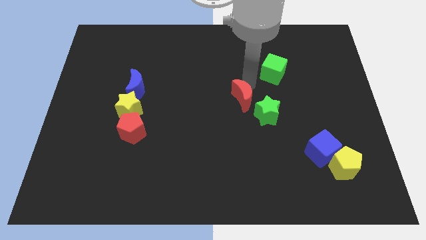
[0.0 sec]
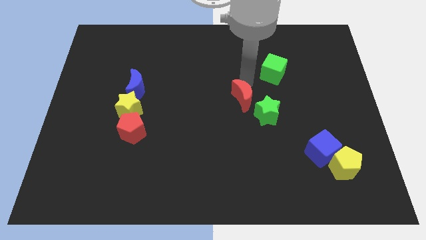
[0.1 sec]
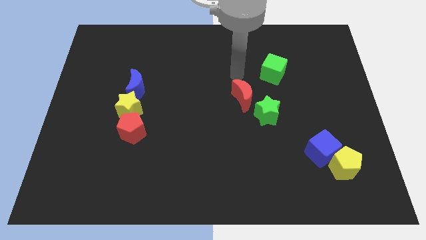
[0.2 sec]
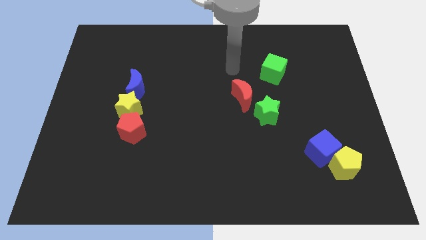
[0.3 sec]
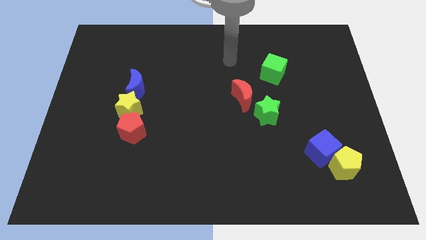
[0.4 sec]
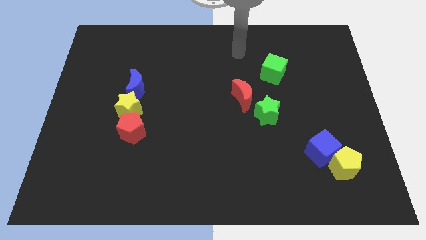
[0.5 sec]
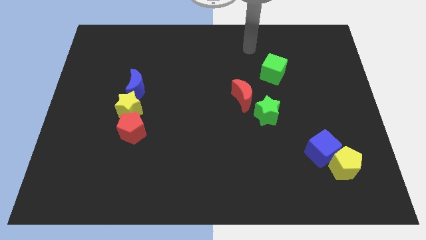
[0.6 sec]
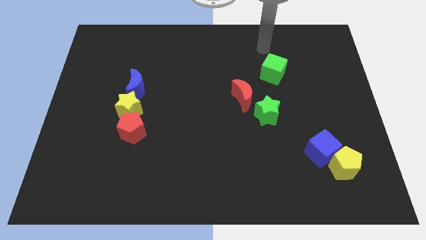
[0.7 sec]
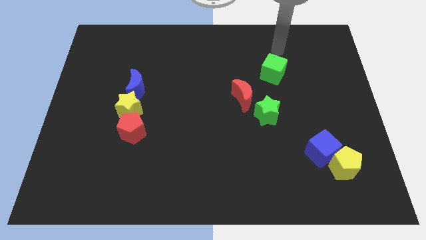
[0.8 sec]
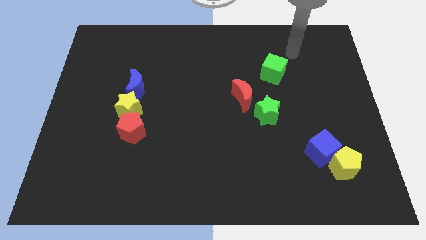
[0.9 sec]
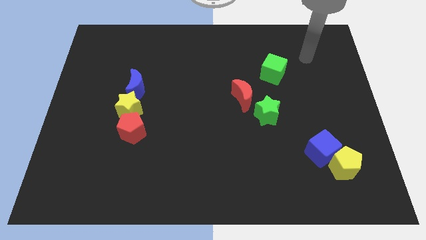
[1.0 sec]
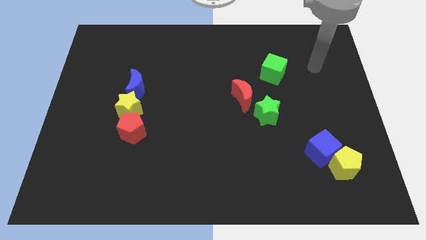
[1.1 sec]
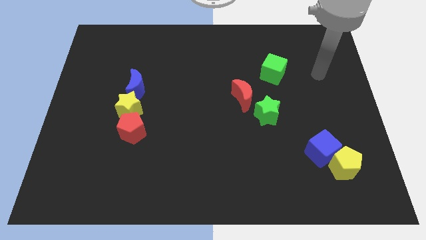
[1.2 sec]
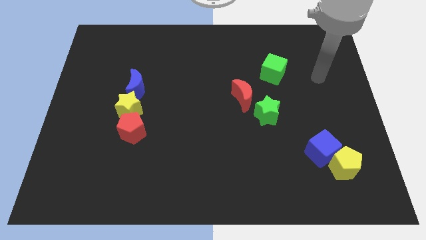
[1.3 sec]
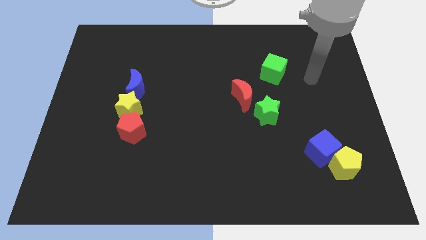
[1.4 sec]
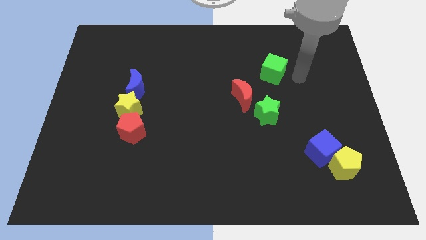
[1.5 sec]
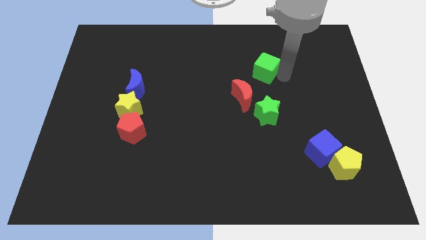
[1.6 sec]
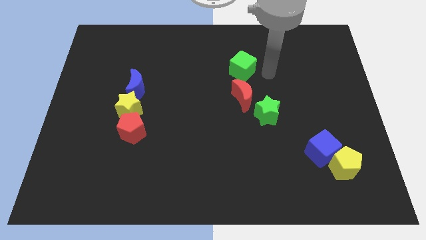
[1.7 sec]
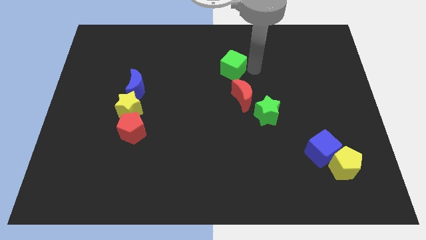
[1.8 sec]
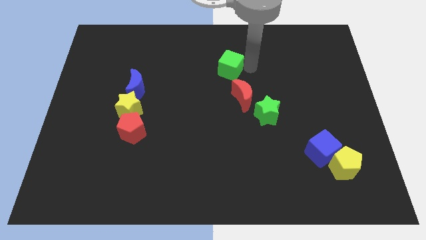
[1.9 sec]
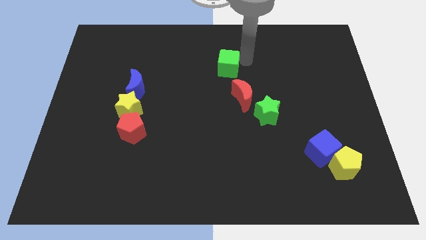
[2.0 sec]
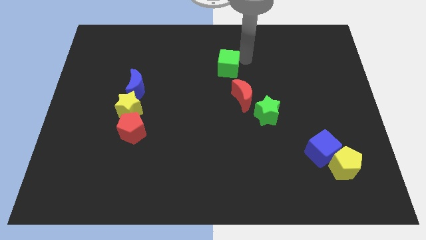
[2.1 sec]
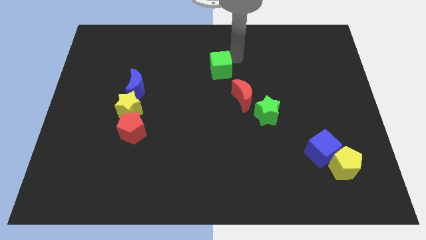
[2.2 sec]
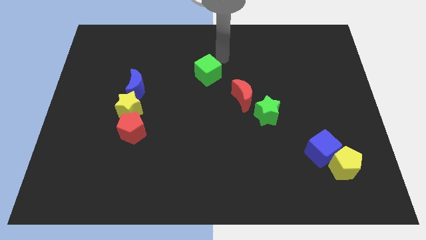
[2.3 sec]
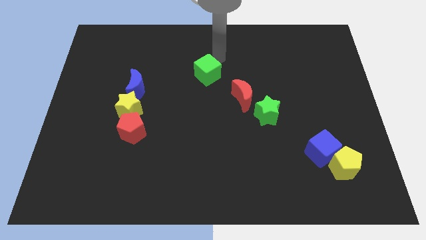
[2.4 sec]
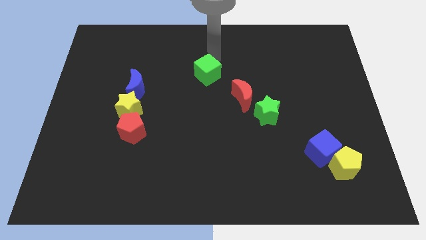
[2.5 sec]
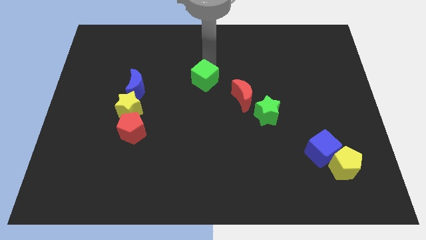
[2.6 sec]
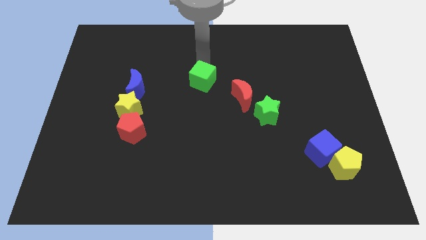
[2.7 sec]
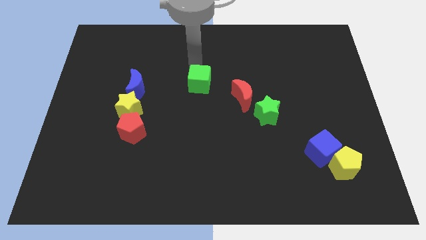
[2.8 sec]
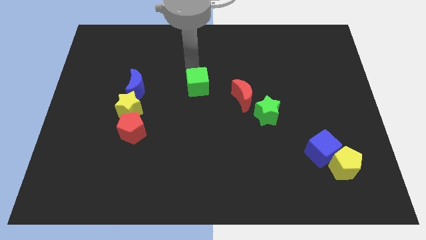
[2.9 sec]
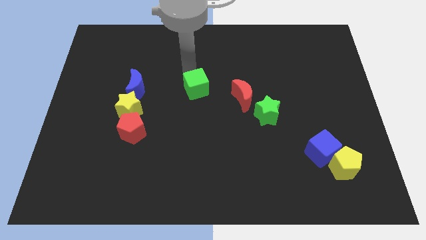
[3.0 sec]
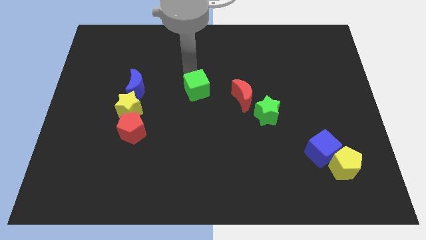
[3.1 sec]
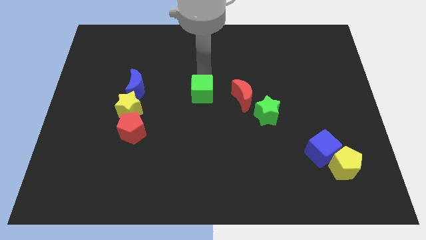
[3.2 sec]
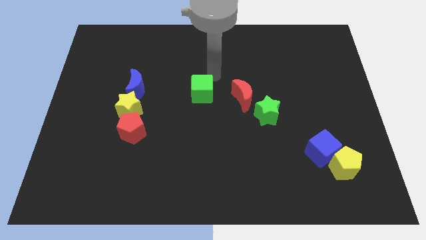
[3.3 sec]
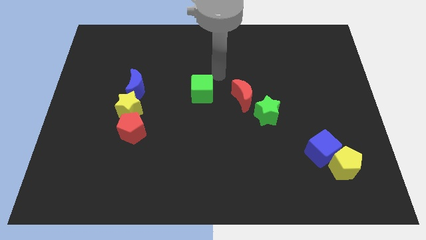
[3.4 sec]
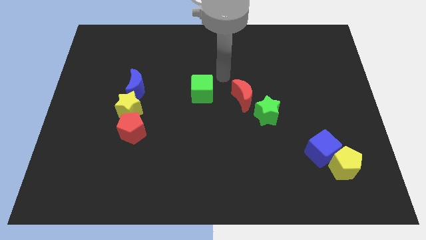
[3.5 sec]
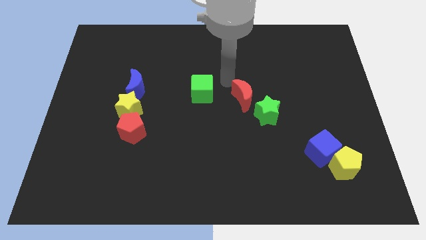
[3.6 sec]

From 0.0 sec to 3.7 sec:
place the green cube to the left of the red crescent

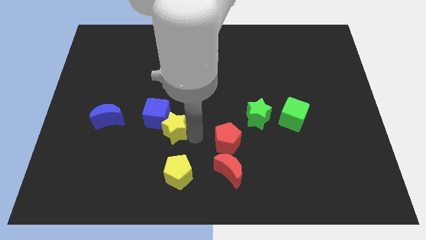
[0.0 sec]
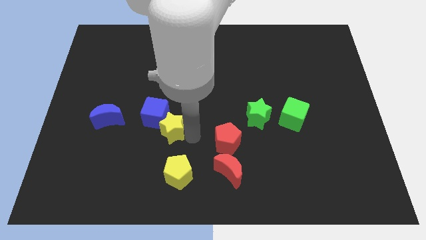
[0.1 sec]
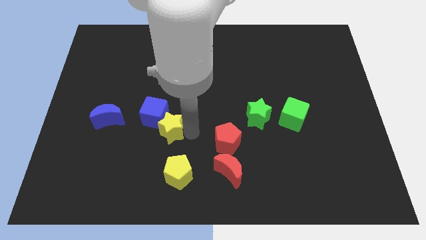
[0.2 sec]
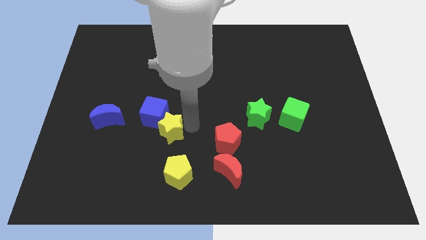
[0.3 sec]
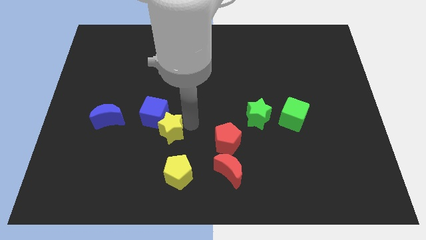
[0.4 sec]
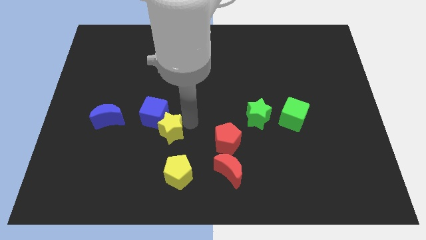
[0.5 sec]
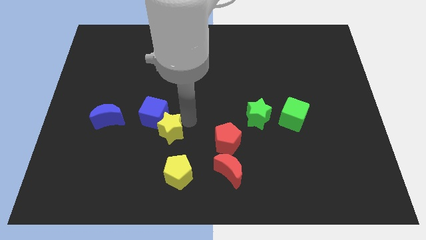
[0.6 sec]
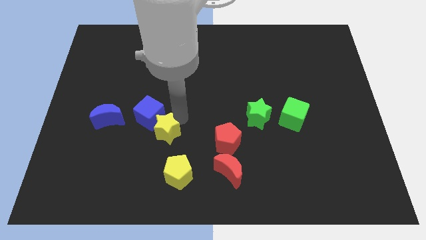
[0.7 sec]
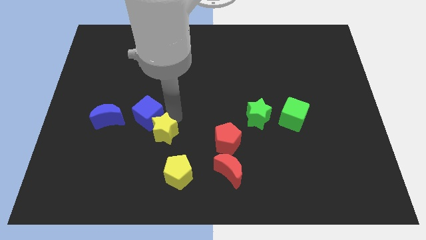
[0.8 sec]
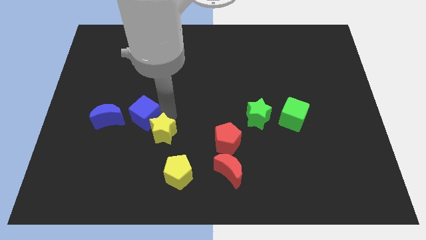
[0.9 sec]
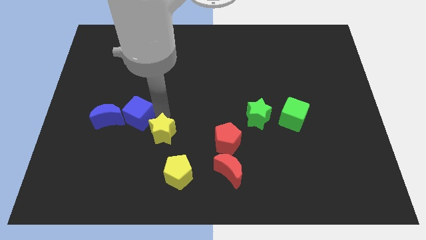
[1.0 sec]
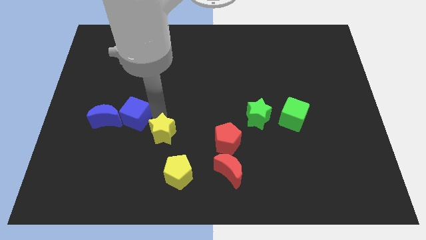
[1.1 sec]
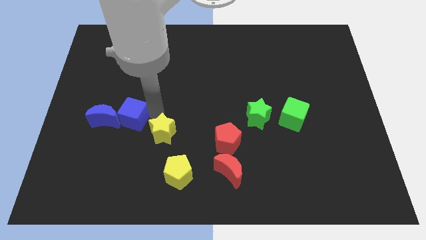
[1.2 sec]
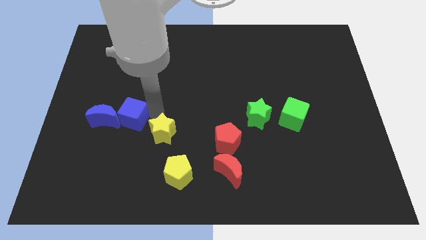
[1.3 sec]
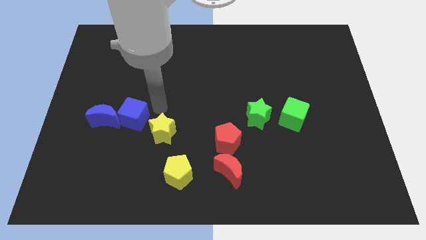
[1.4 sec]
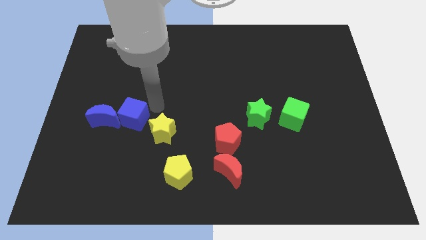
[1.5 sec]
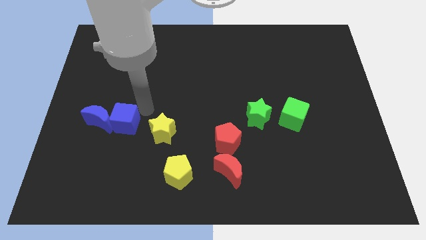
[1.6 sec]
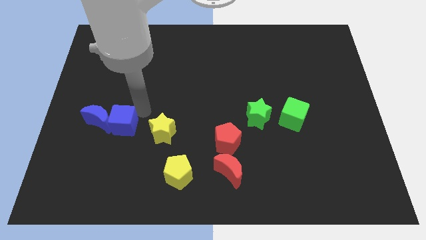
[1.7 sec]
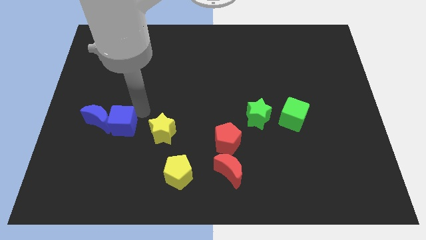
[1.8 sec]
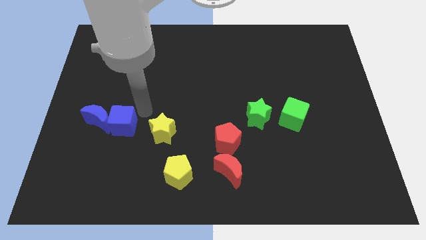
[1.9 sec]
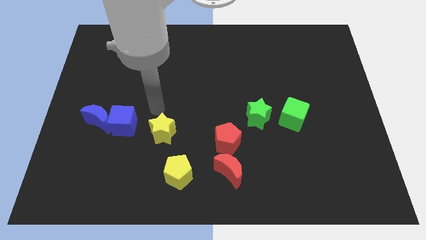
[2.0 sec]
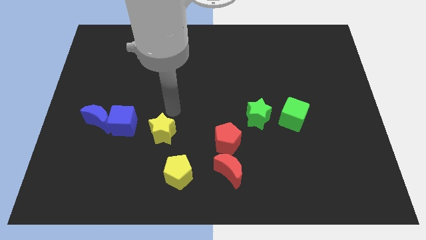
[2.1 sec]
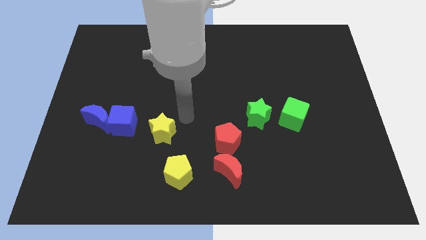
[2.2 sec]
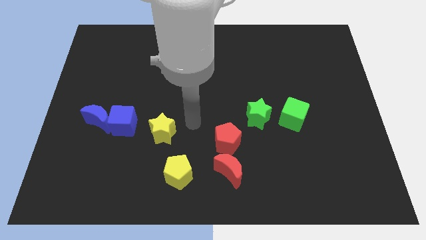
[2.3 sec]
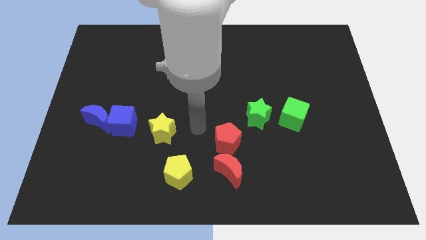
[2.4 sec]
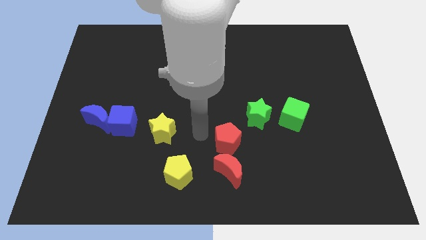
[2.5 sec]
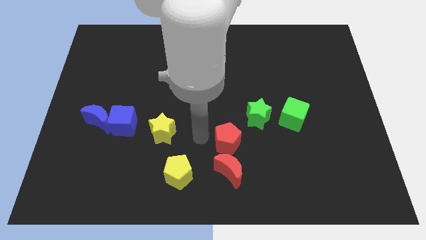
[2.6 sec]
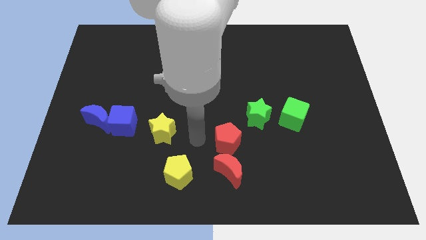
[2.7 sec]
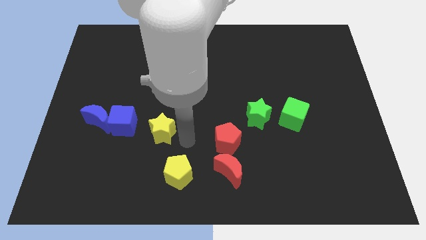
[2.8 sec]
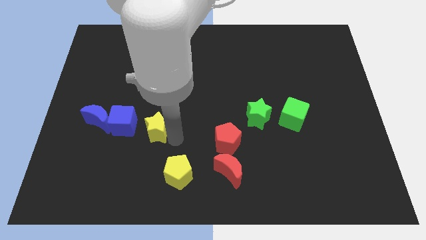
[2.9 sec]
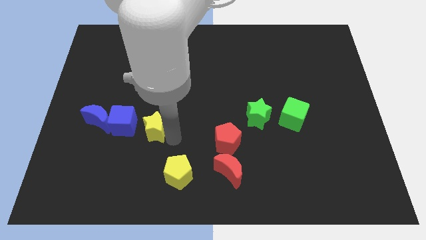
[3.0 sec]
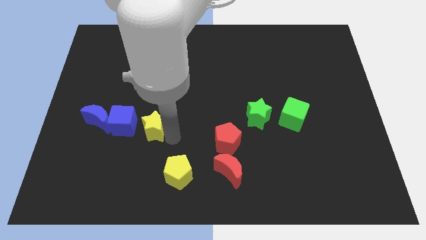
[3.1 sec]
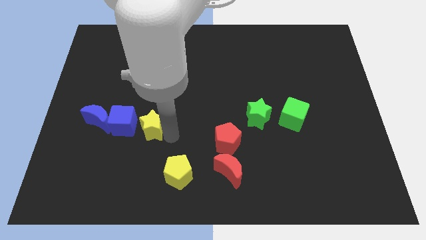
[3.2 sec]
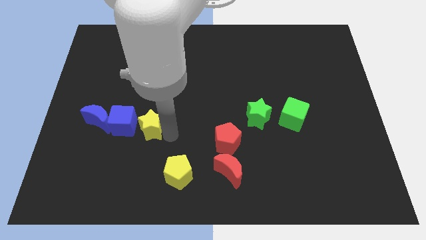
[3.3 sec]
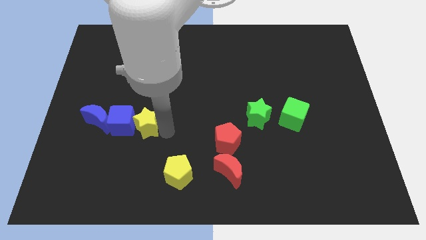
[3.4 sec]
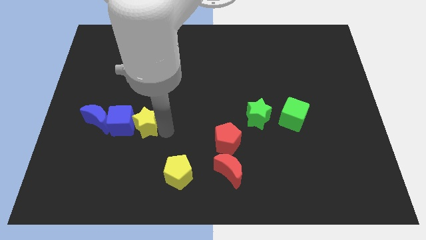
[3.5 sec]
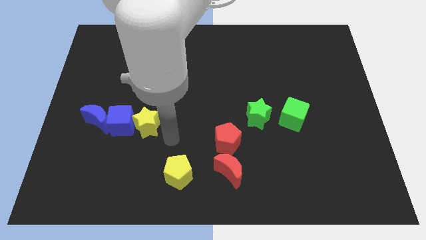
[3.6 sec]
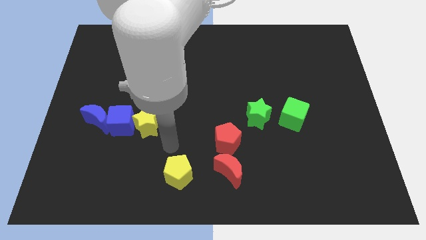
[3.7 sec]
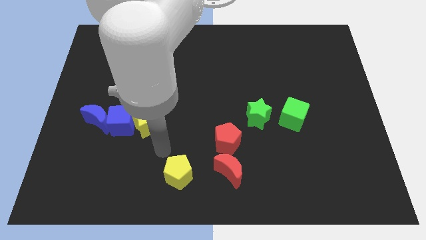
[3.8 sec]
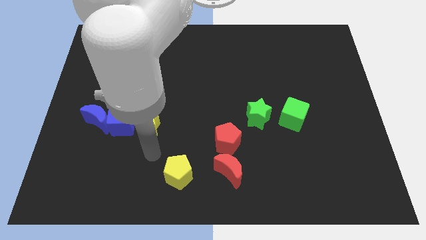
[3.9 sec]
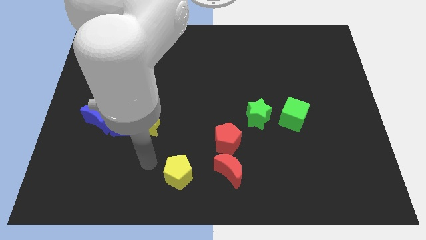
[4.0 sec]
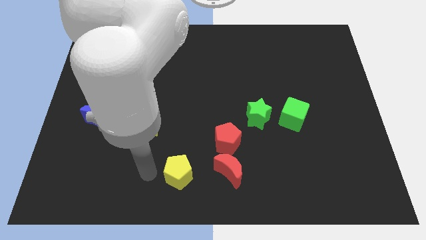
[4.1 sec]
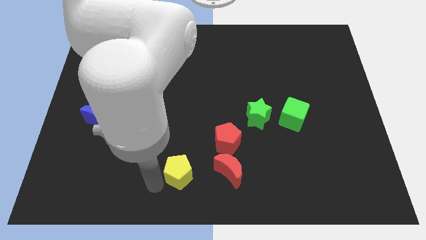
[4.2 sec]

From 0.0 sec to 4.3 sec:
push the blue cube into the blue crescent

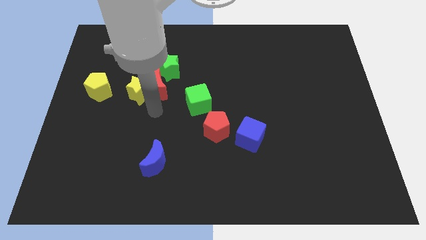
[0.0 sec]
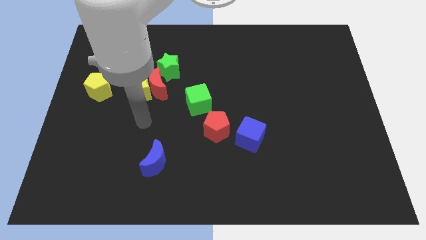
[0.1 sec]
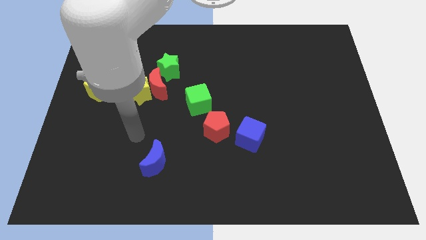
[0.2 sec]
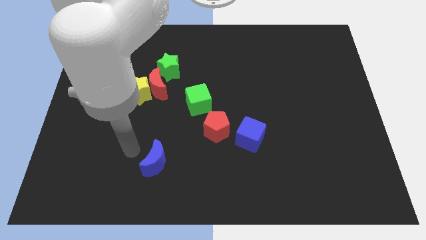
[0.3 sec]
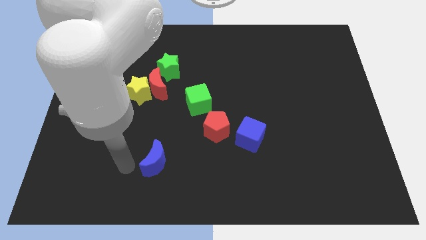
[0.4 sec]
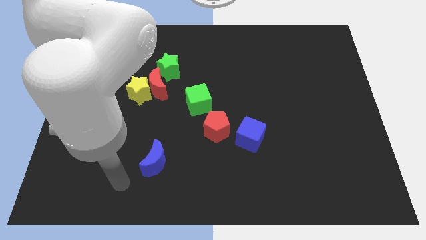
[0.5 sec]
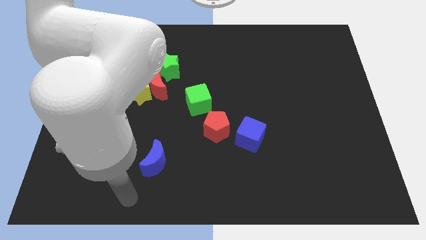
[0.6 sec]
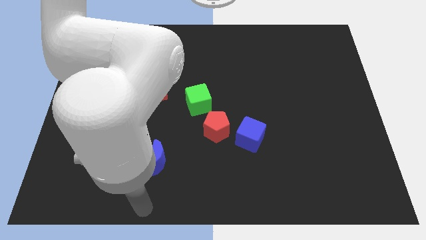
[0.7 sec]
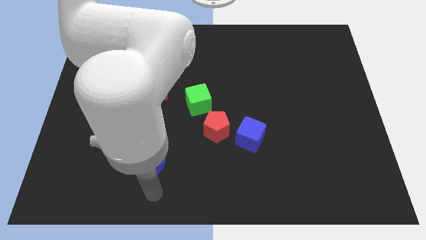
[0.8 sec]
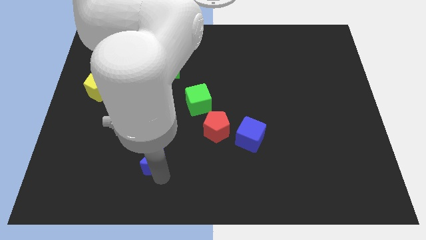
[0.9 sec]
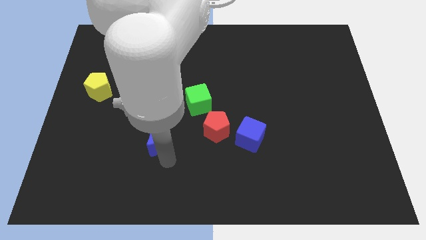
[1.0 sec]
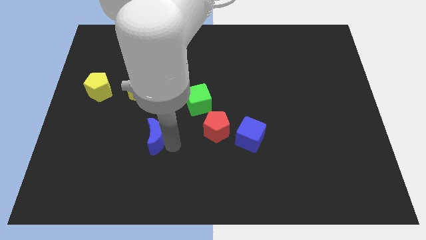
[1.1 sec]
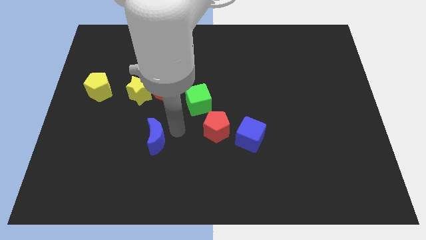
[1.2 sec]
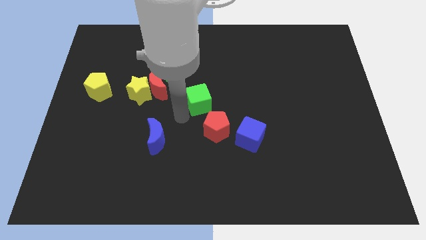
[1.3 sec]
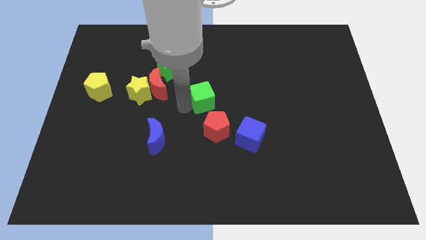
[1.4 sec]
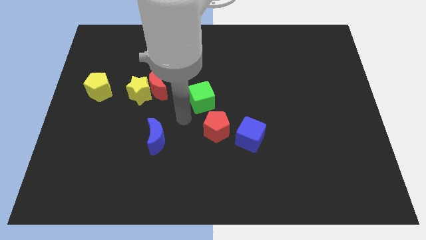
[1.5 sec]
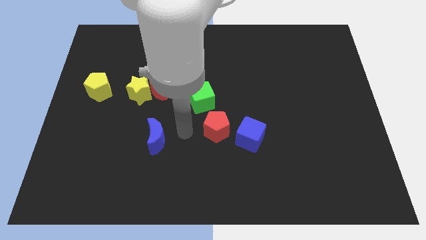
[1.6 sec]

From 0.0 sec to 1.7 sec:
slightly push green cube upwards
